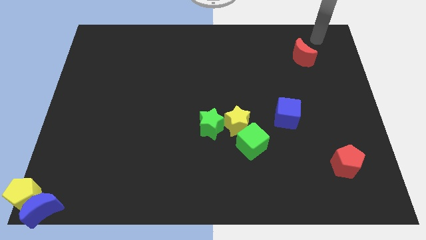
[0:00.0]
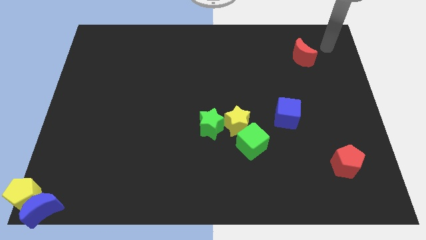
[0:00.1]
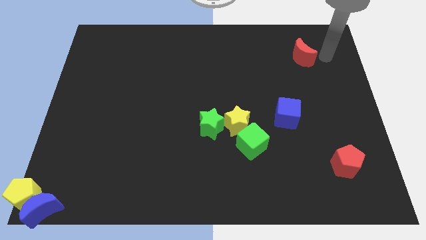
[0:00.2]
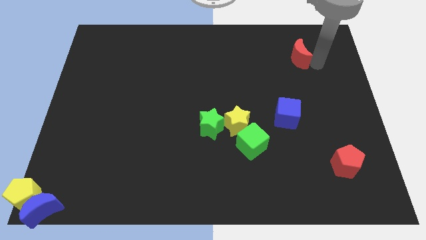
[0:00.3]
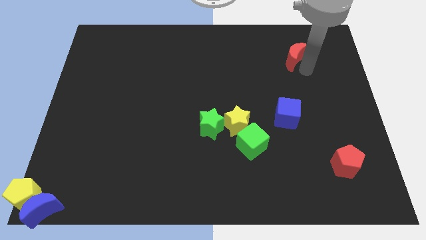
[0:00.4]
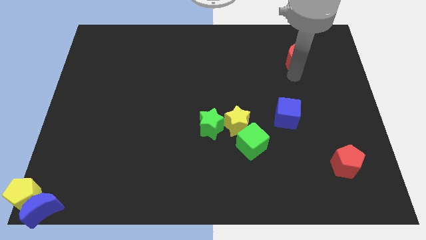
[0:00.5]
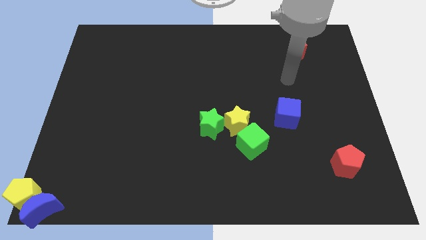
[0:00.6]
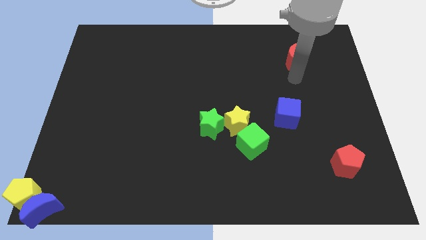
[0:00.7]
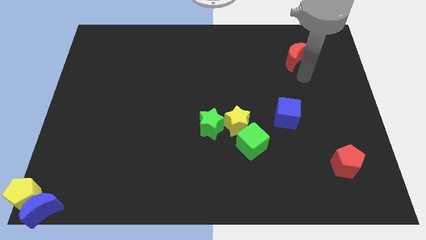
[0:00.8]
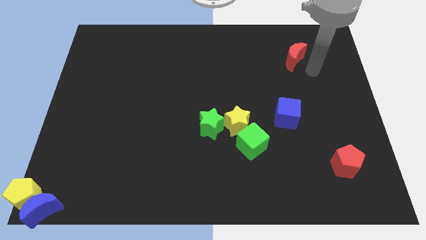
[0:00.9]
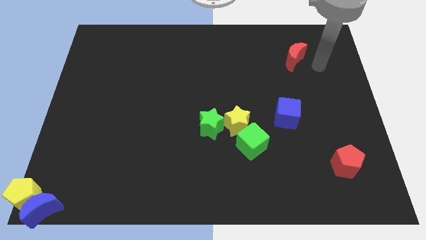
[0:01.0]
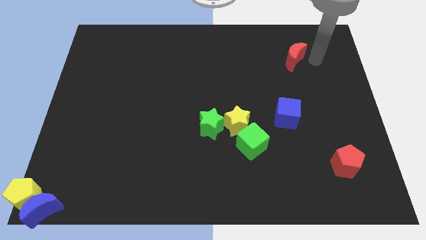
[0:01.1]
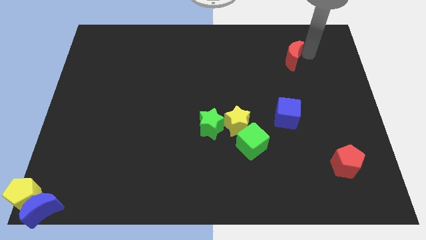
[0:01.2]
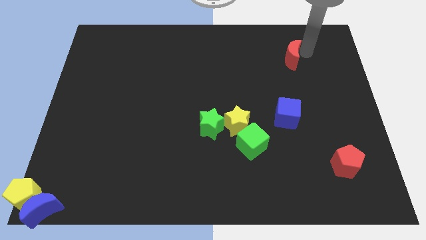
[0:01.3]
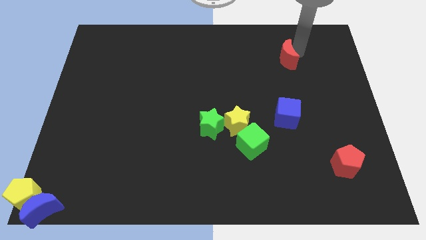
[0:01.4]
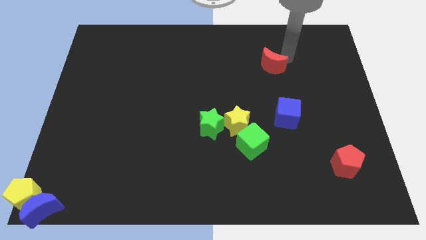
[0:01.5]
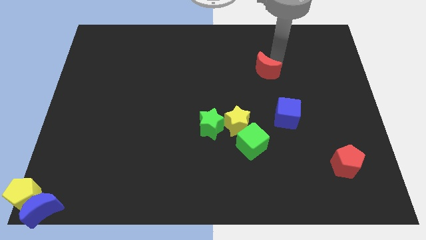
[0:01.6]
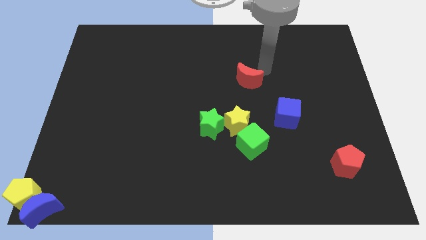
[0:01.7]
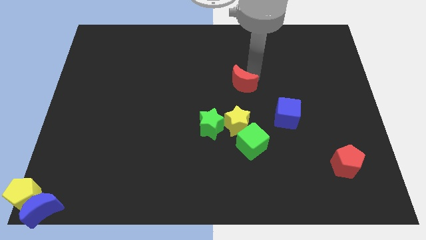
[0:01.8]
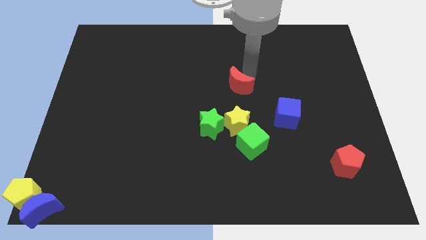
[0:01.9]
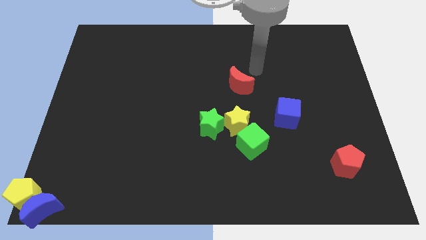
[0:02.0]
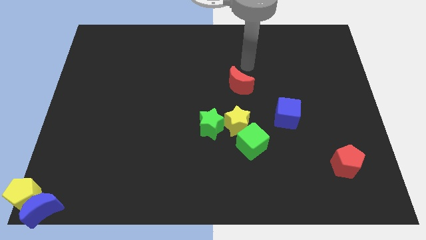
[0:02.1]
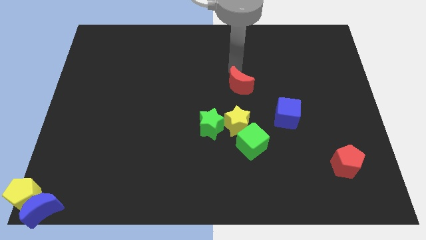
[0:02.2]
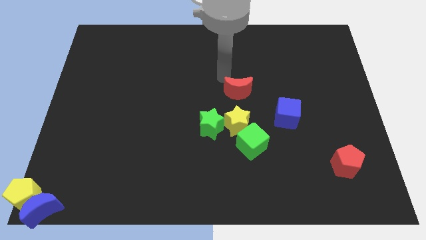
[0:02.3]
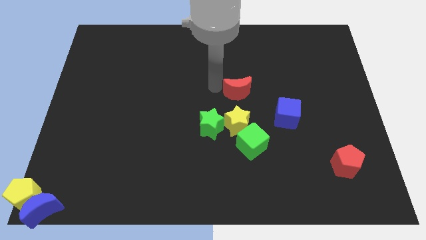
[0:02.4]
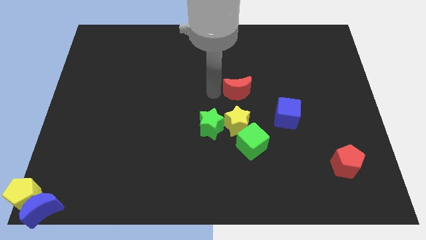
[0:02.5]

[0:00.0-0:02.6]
push the red moon to the top of yellow star

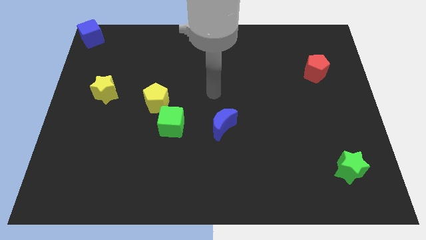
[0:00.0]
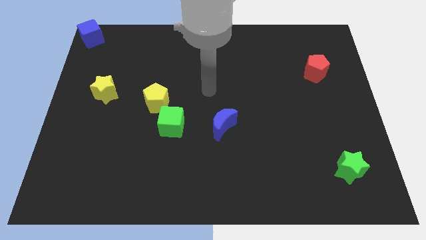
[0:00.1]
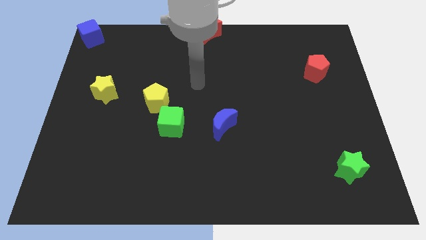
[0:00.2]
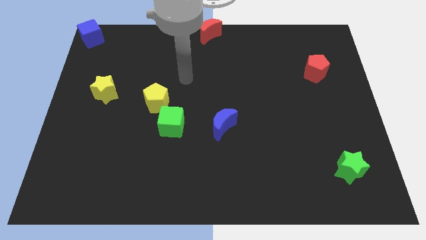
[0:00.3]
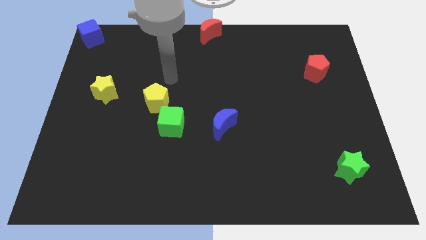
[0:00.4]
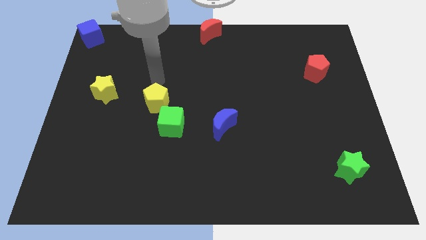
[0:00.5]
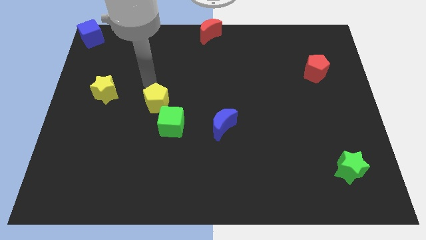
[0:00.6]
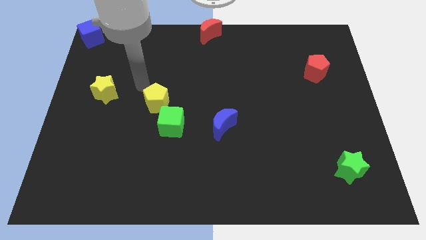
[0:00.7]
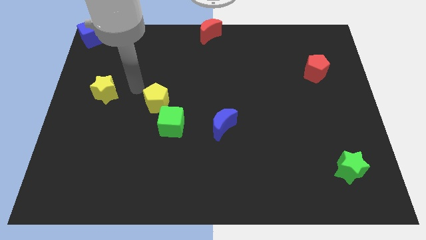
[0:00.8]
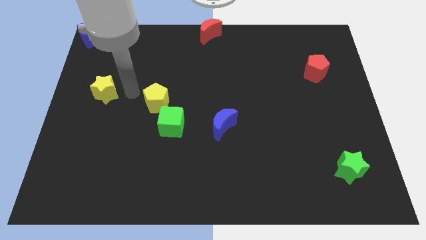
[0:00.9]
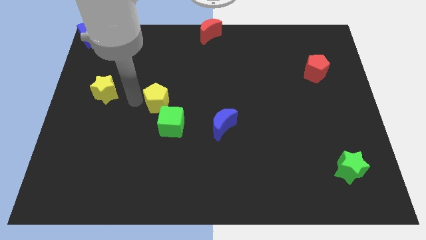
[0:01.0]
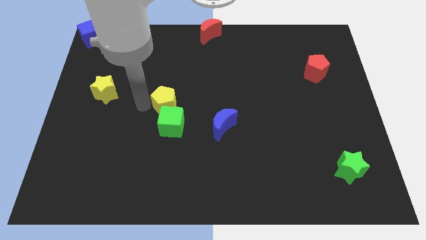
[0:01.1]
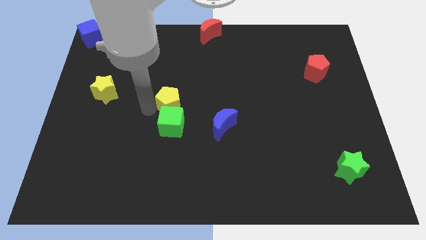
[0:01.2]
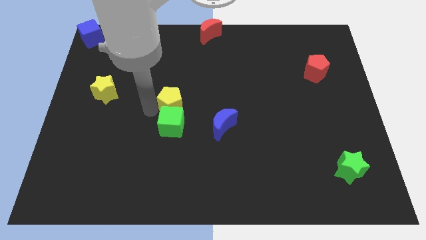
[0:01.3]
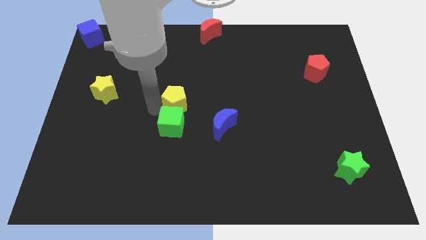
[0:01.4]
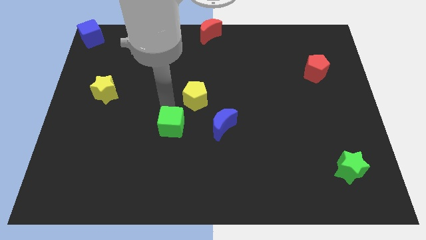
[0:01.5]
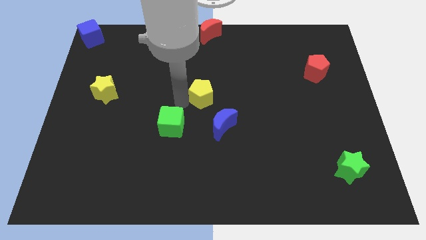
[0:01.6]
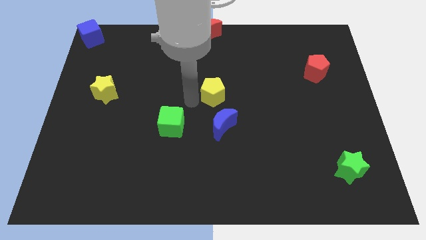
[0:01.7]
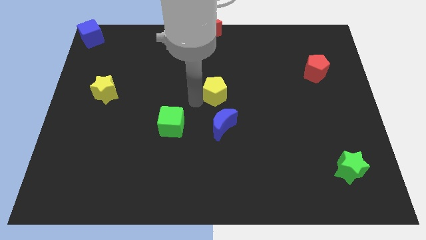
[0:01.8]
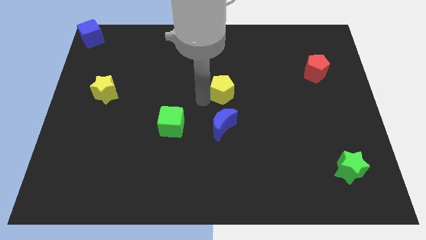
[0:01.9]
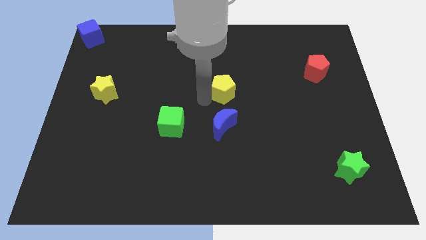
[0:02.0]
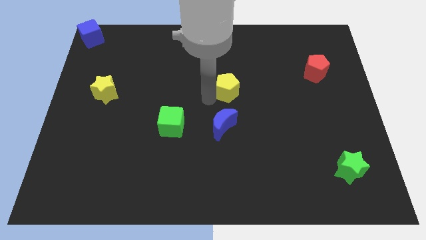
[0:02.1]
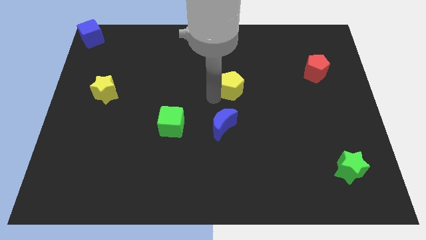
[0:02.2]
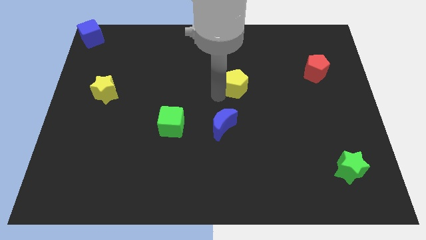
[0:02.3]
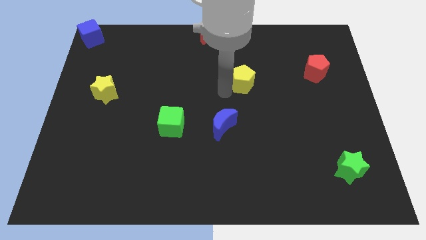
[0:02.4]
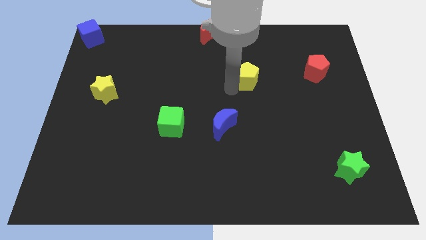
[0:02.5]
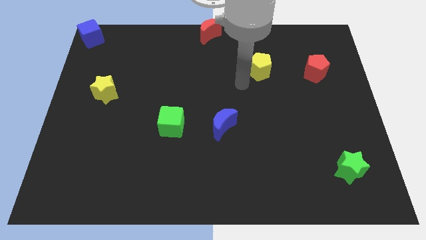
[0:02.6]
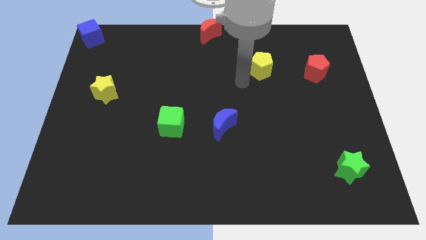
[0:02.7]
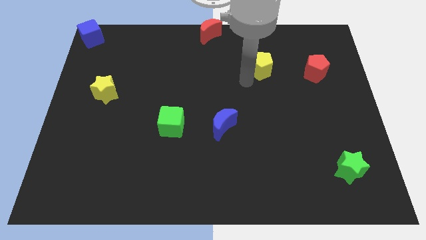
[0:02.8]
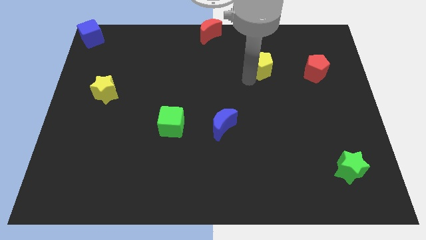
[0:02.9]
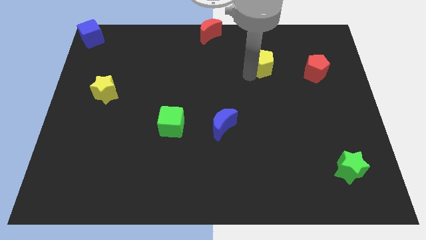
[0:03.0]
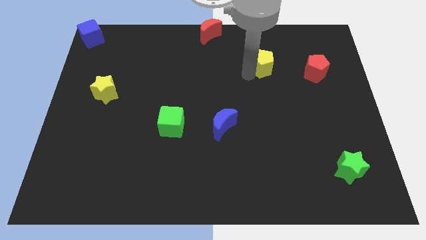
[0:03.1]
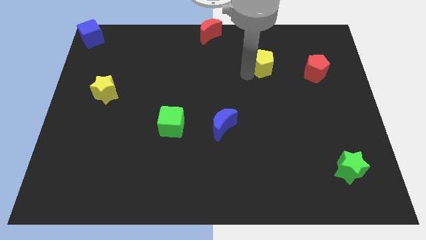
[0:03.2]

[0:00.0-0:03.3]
place the yellow pentagon parallel to the left of red pentagon

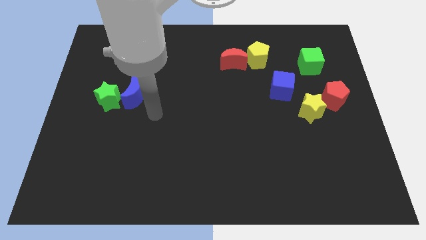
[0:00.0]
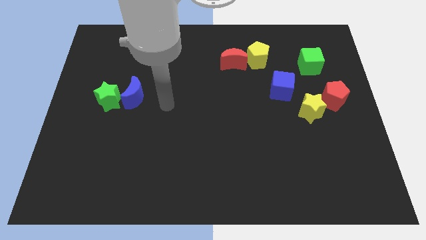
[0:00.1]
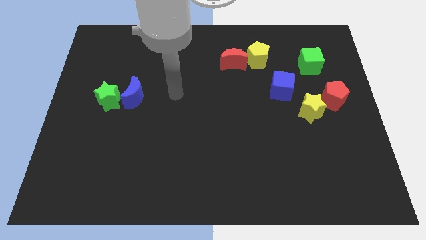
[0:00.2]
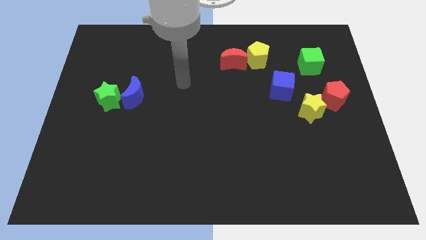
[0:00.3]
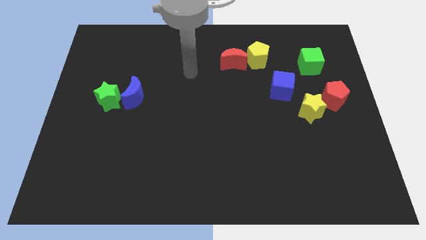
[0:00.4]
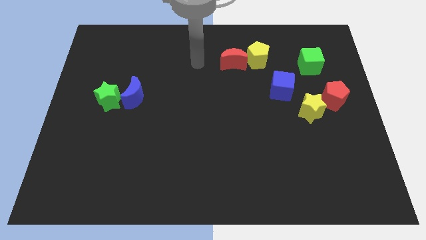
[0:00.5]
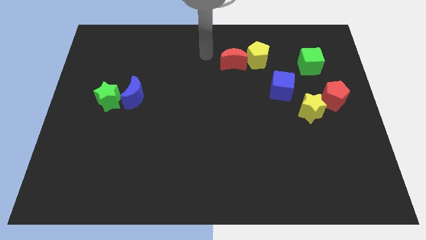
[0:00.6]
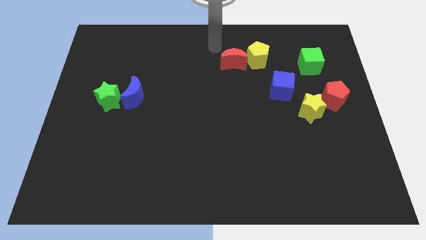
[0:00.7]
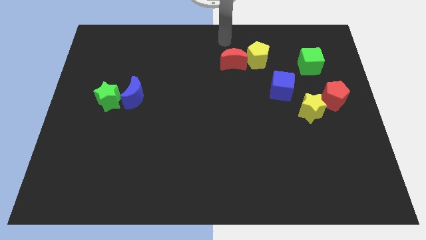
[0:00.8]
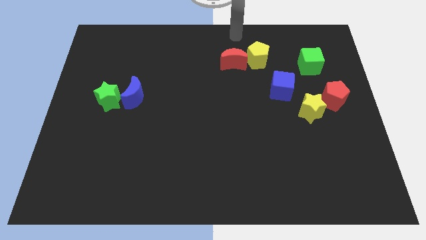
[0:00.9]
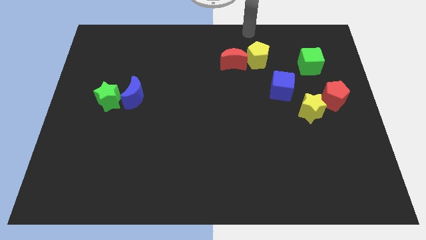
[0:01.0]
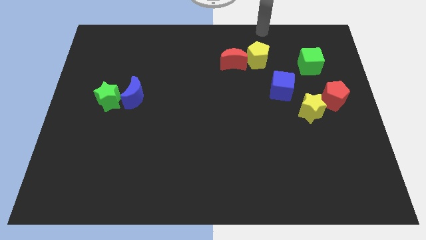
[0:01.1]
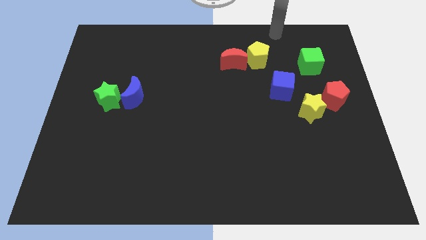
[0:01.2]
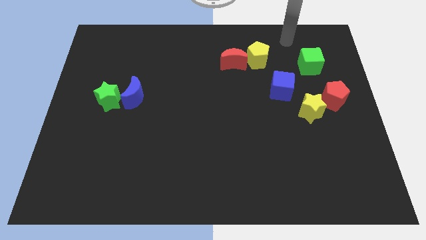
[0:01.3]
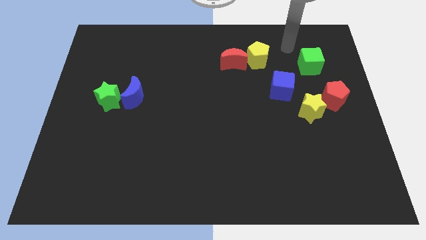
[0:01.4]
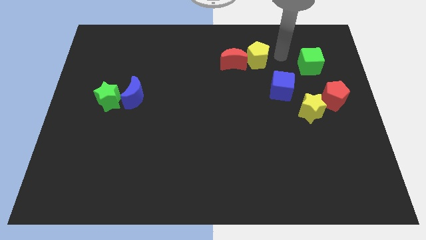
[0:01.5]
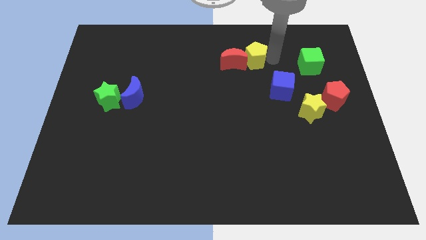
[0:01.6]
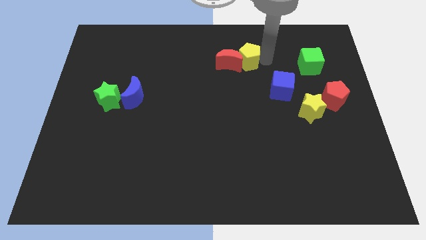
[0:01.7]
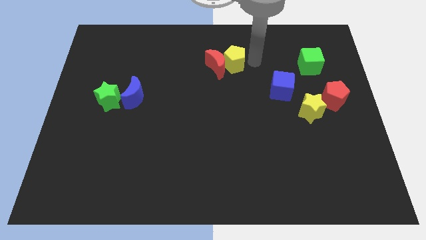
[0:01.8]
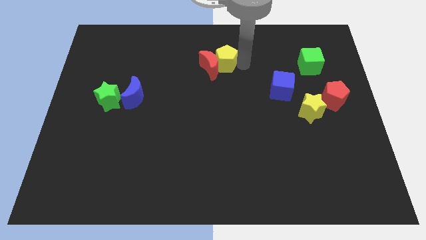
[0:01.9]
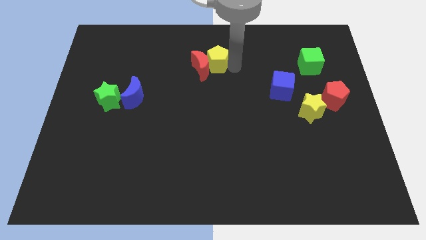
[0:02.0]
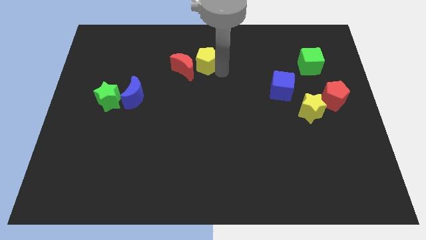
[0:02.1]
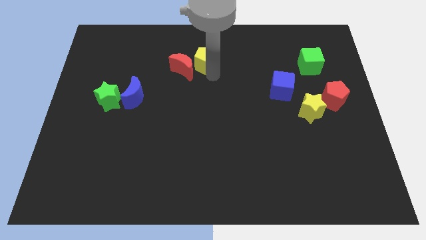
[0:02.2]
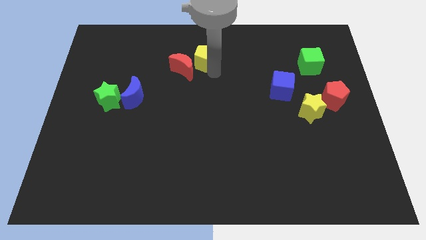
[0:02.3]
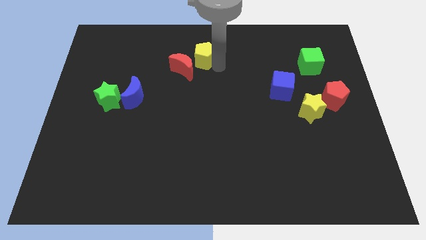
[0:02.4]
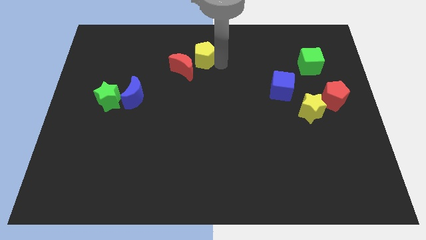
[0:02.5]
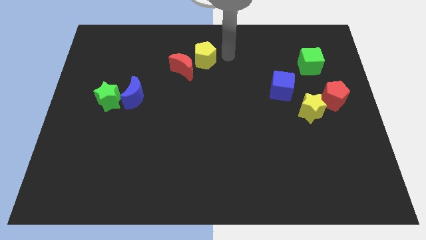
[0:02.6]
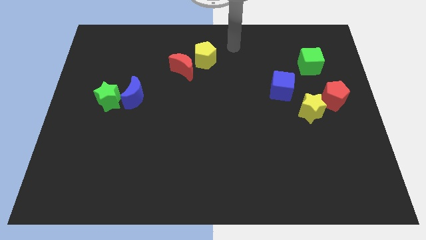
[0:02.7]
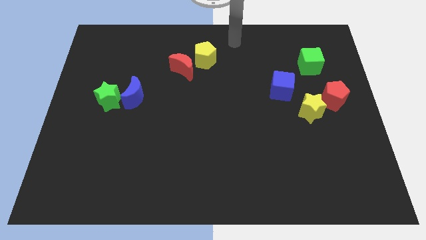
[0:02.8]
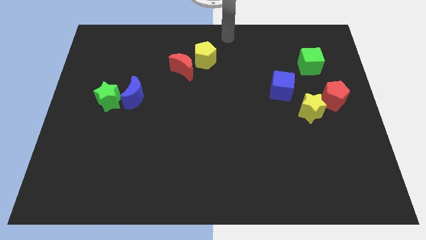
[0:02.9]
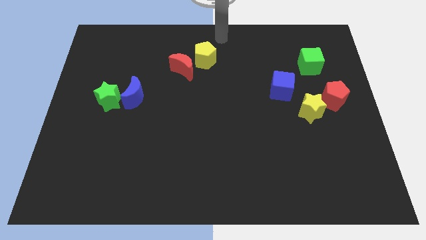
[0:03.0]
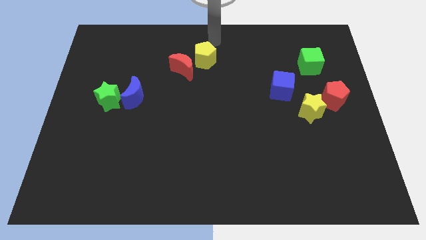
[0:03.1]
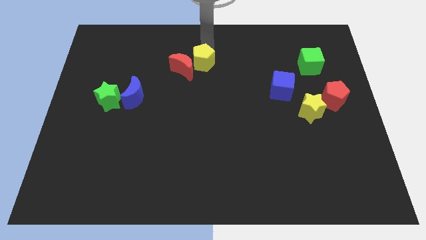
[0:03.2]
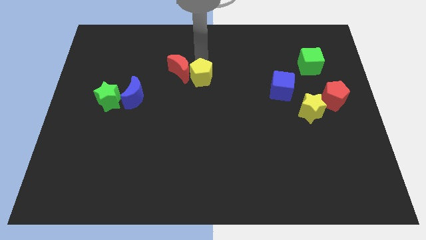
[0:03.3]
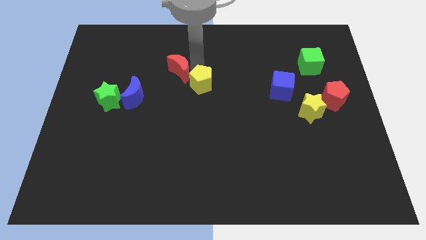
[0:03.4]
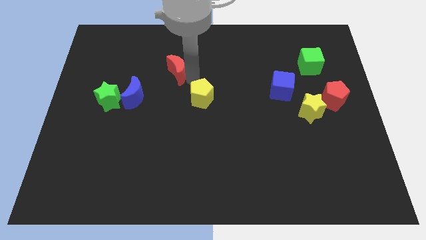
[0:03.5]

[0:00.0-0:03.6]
push yellow pentagon and red crescent to the top center of the board
